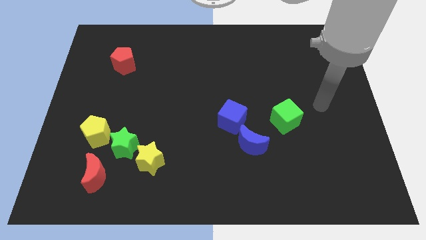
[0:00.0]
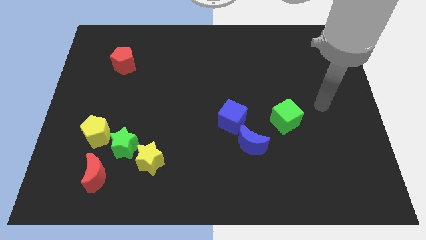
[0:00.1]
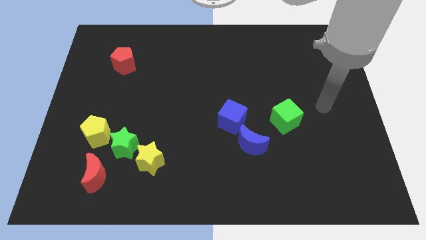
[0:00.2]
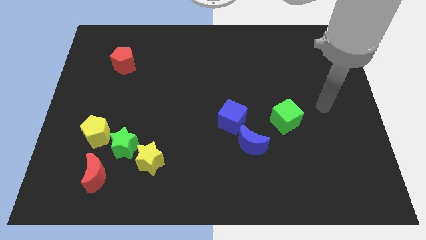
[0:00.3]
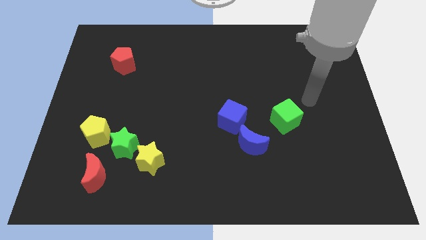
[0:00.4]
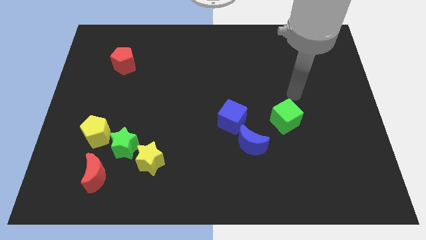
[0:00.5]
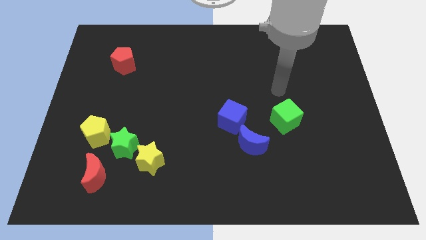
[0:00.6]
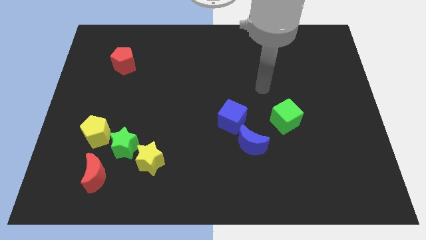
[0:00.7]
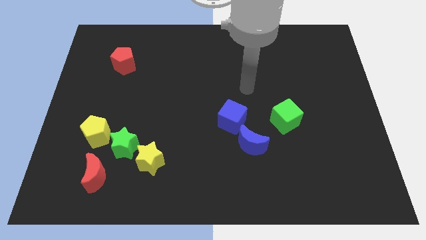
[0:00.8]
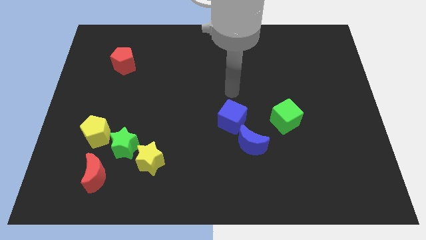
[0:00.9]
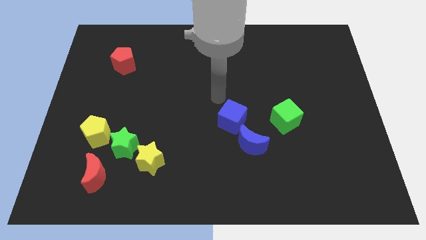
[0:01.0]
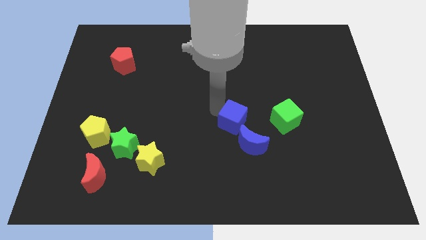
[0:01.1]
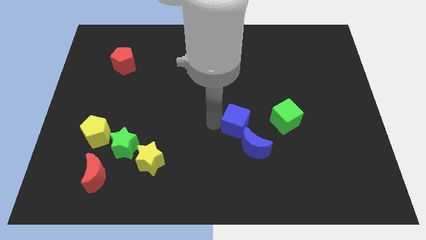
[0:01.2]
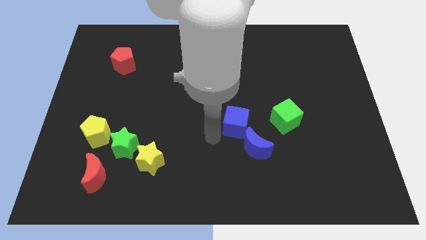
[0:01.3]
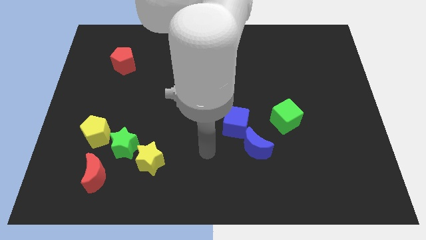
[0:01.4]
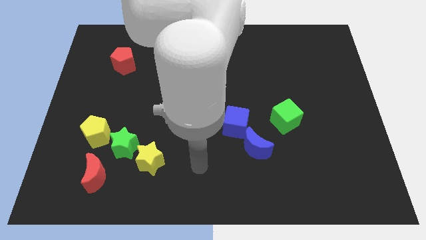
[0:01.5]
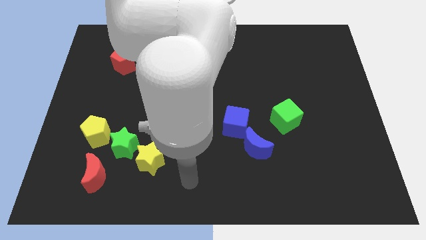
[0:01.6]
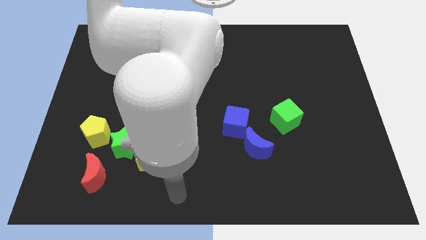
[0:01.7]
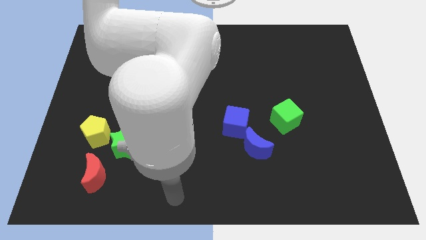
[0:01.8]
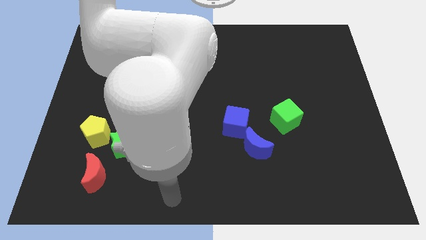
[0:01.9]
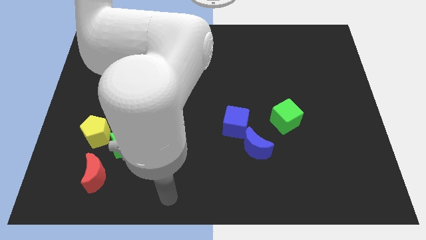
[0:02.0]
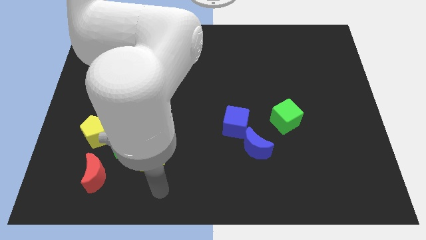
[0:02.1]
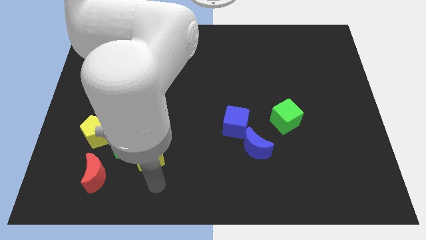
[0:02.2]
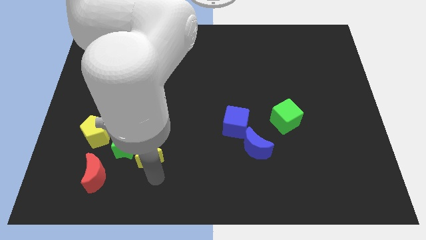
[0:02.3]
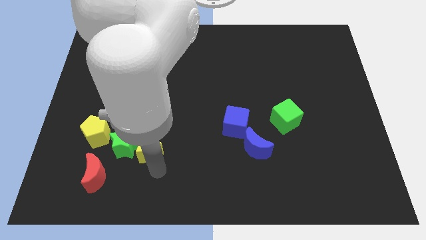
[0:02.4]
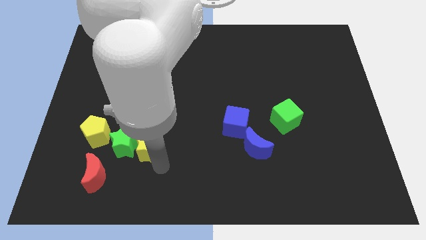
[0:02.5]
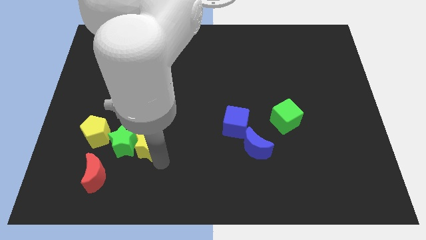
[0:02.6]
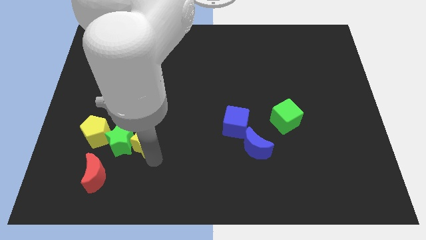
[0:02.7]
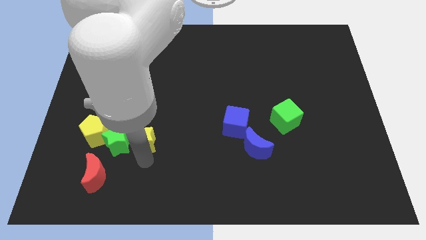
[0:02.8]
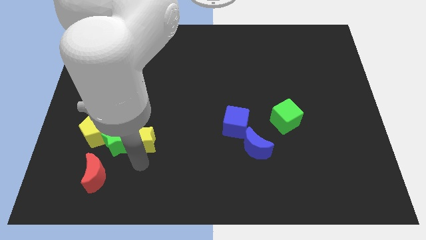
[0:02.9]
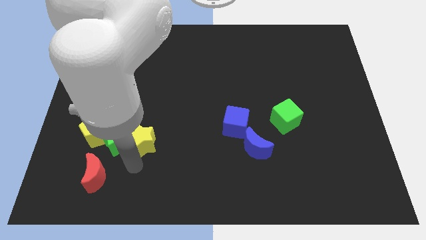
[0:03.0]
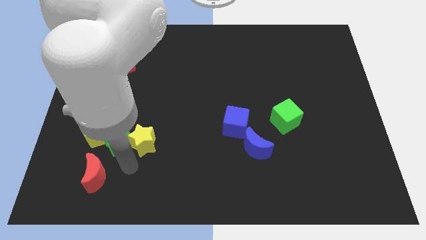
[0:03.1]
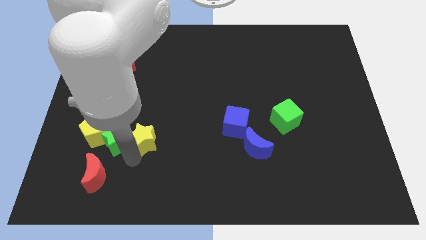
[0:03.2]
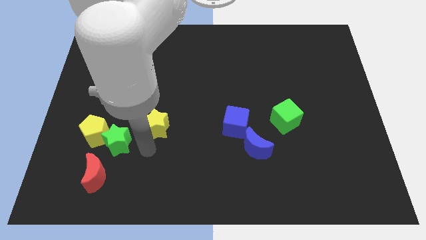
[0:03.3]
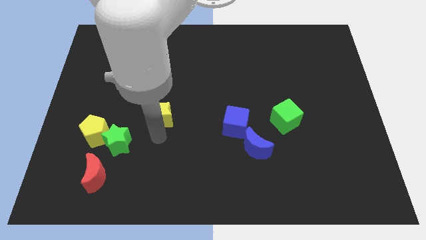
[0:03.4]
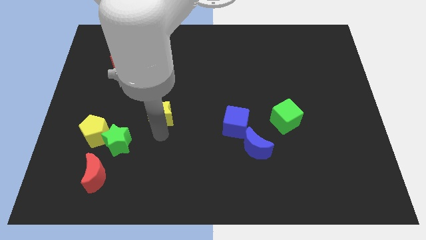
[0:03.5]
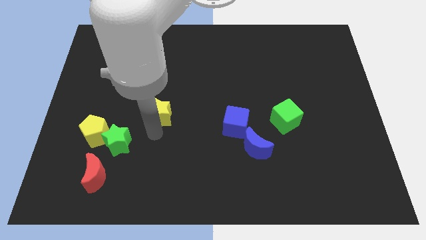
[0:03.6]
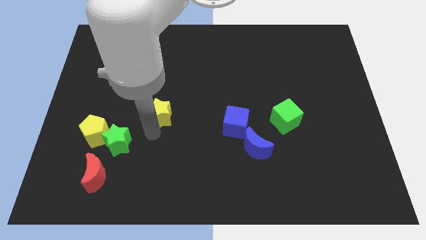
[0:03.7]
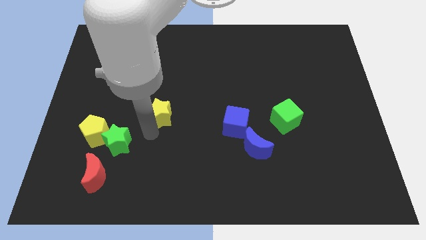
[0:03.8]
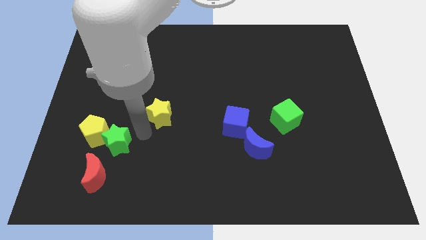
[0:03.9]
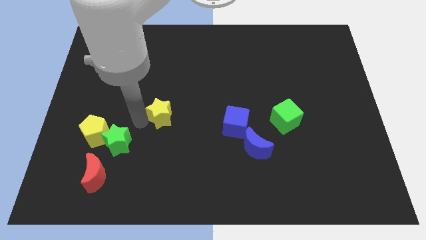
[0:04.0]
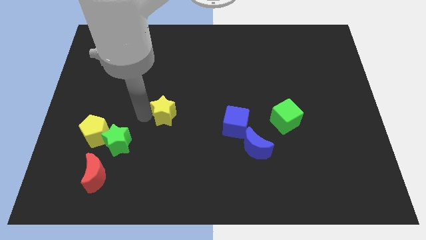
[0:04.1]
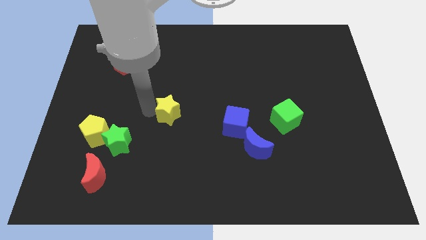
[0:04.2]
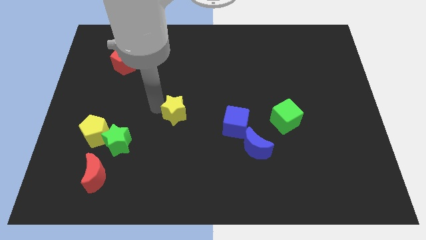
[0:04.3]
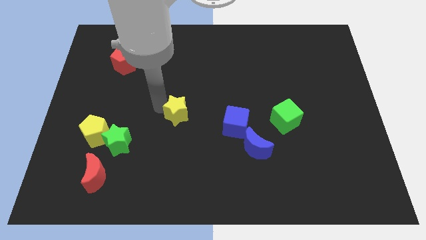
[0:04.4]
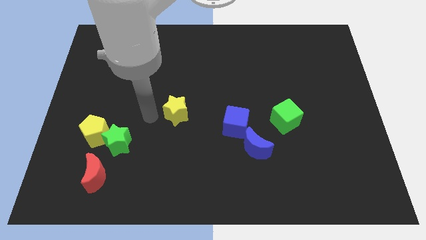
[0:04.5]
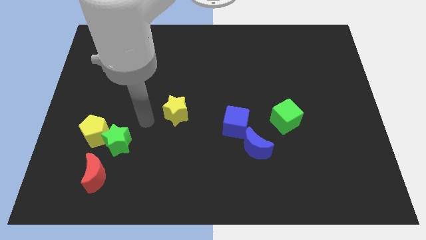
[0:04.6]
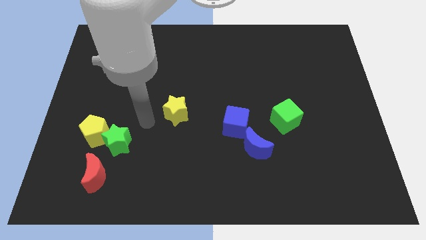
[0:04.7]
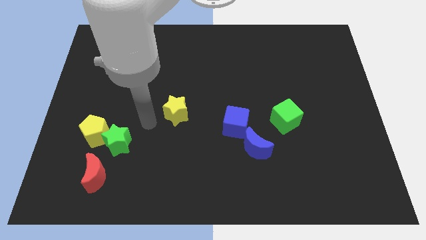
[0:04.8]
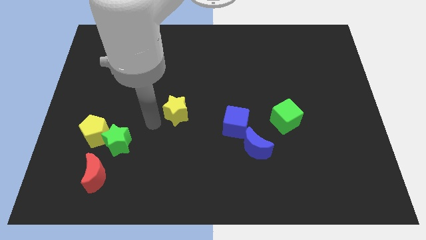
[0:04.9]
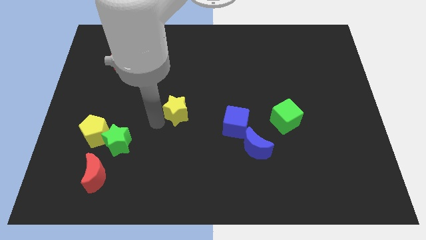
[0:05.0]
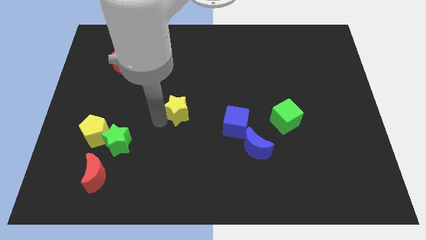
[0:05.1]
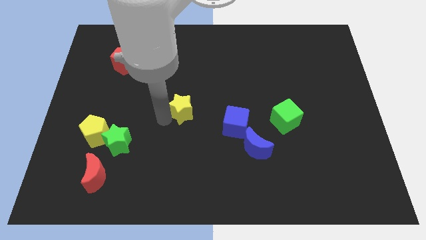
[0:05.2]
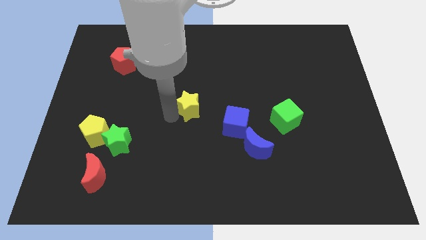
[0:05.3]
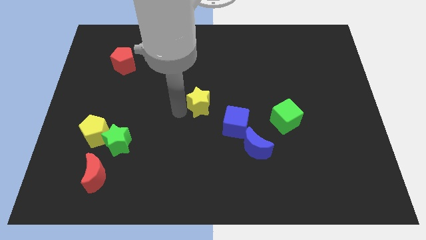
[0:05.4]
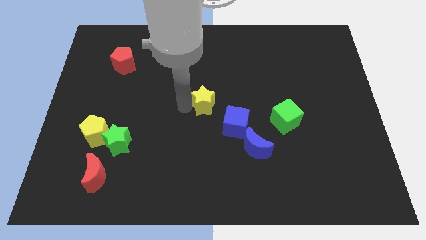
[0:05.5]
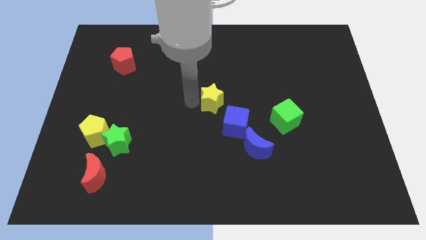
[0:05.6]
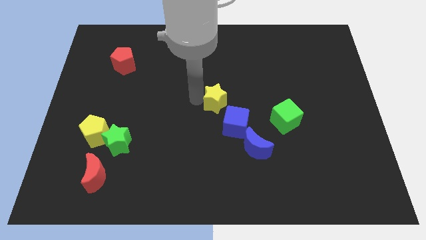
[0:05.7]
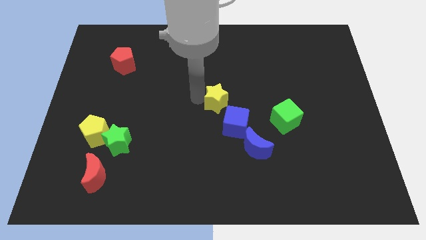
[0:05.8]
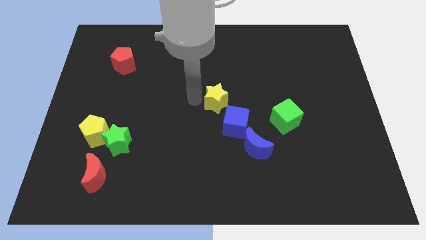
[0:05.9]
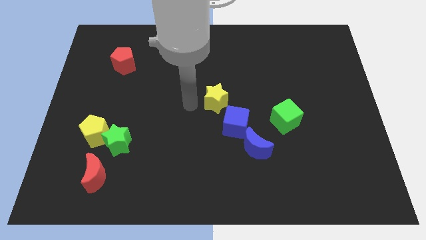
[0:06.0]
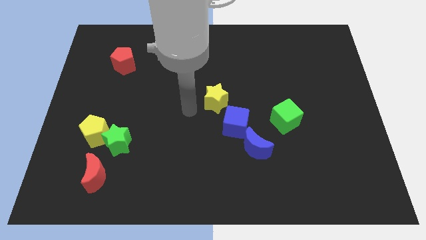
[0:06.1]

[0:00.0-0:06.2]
move the yellow star towards the center of the board

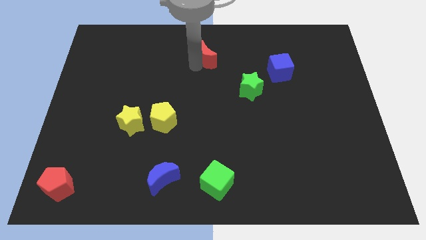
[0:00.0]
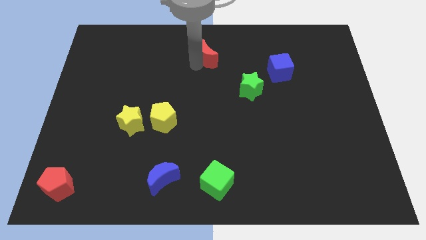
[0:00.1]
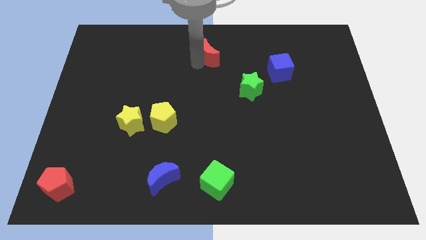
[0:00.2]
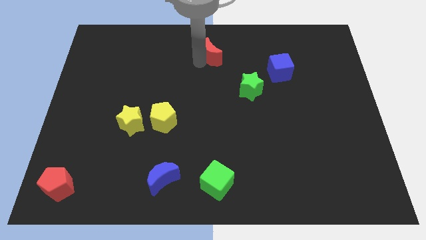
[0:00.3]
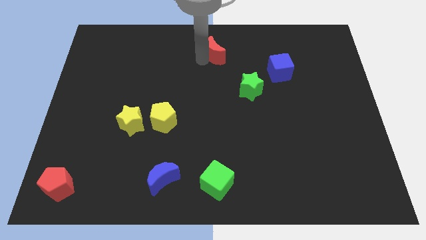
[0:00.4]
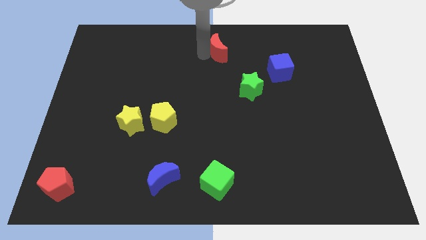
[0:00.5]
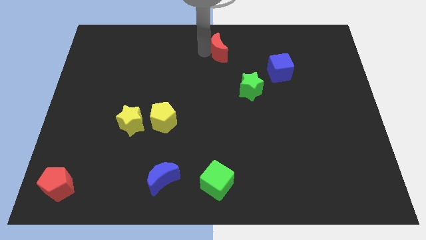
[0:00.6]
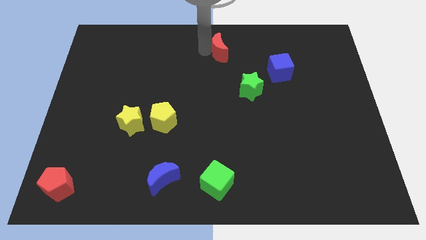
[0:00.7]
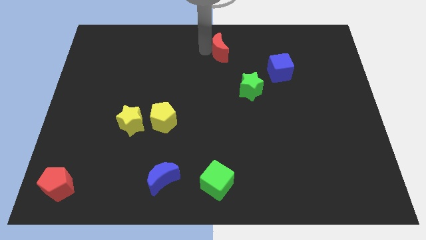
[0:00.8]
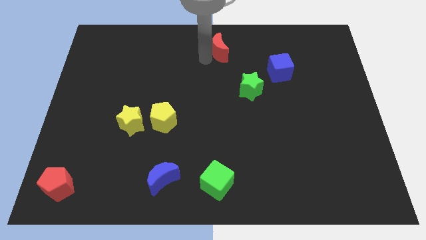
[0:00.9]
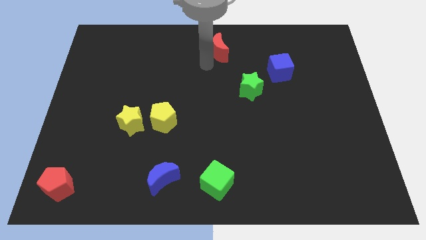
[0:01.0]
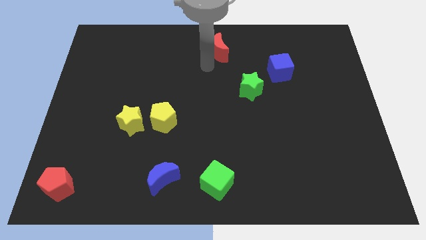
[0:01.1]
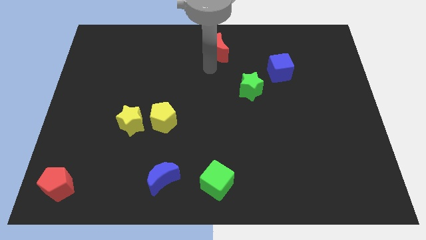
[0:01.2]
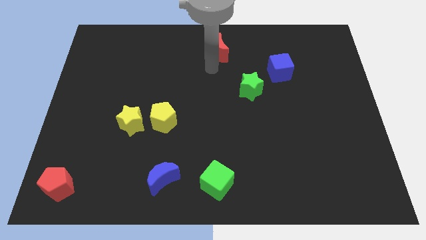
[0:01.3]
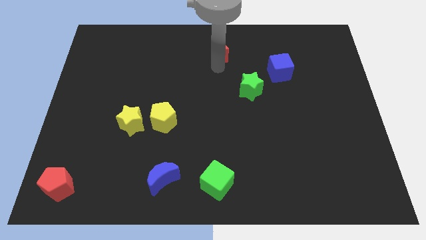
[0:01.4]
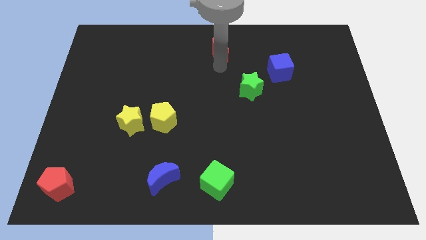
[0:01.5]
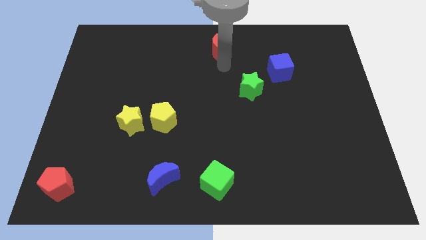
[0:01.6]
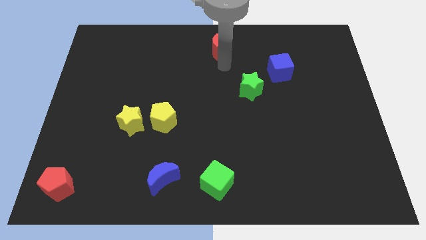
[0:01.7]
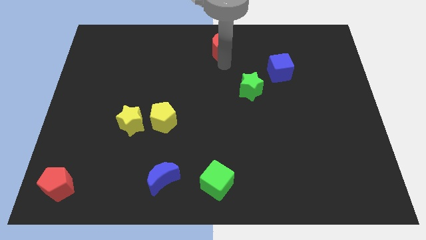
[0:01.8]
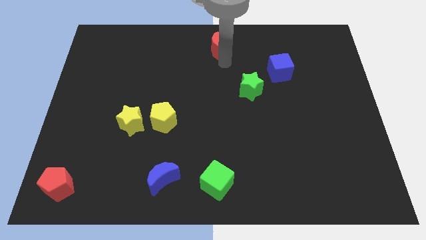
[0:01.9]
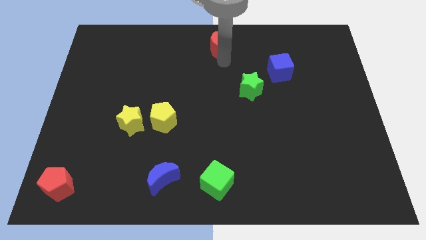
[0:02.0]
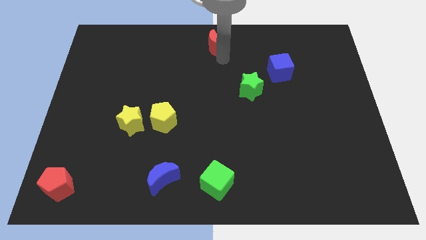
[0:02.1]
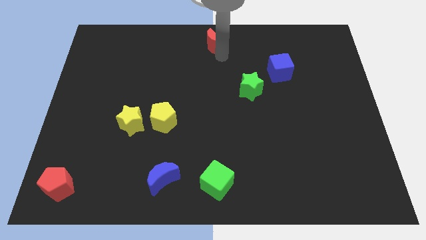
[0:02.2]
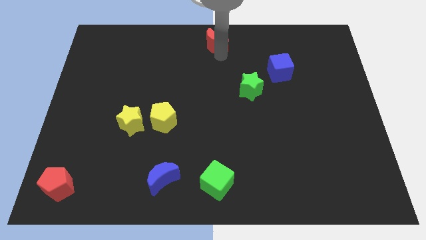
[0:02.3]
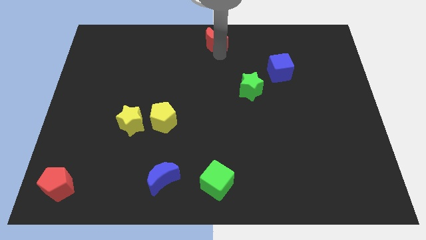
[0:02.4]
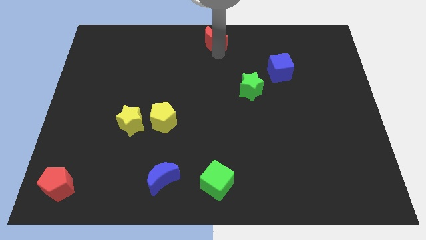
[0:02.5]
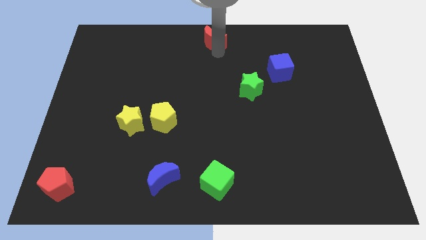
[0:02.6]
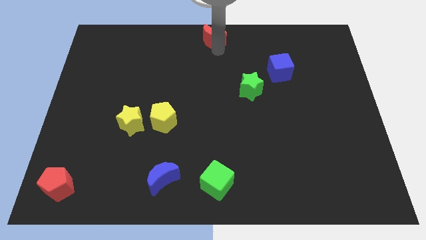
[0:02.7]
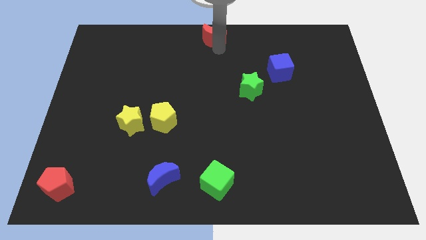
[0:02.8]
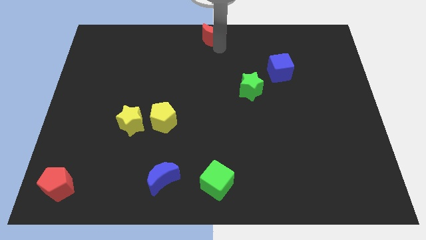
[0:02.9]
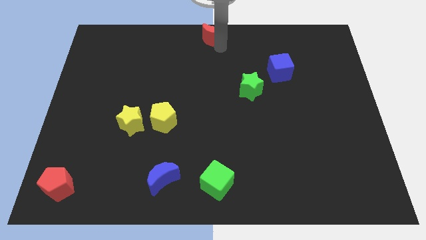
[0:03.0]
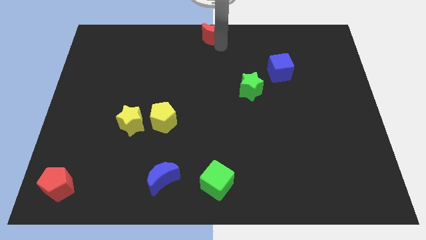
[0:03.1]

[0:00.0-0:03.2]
put the red crescent at the top center of the board
